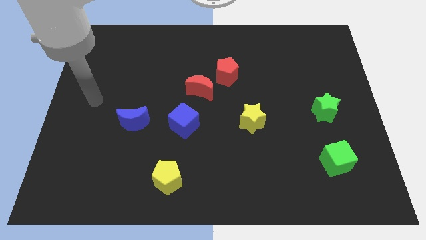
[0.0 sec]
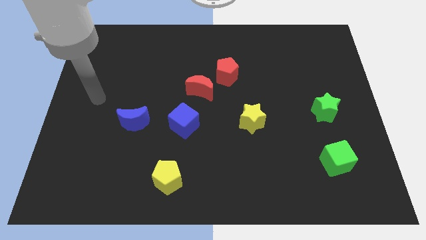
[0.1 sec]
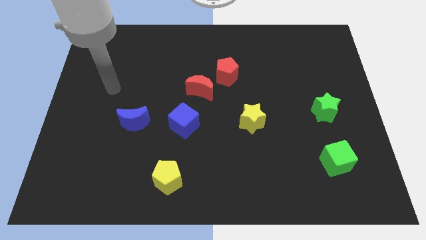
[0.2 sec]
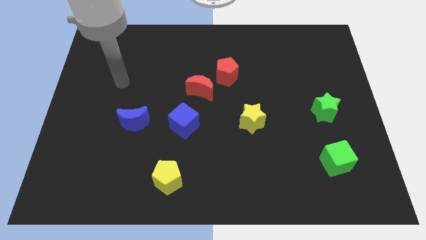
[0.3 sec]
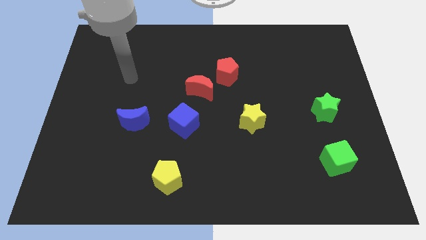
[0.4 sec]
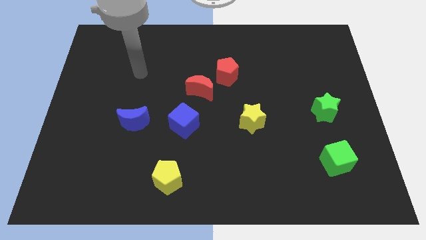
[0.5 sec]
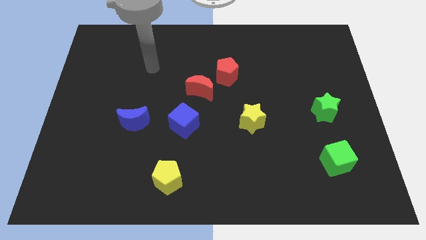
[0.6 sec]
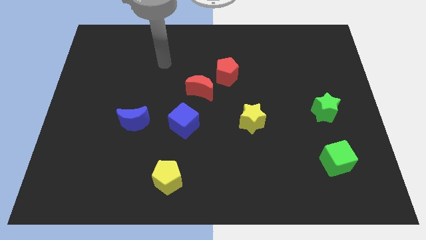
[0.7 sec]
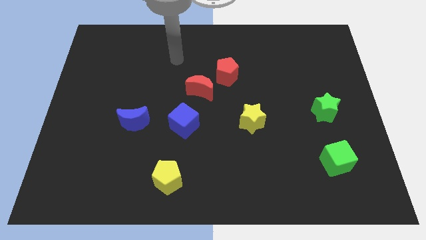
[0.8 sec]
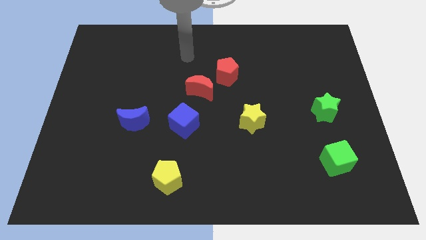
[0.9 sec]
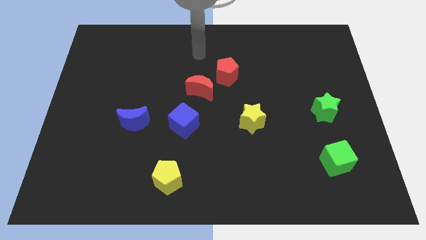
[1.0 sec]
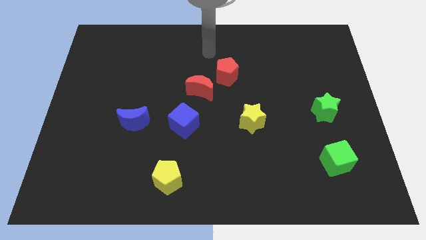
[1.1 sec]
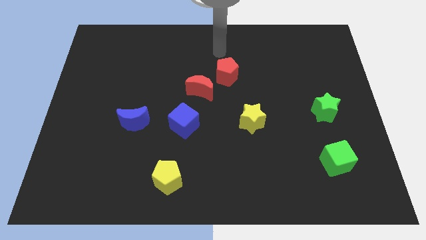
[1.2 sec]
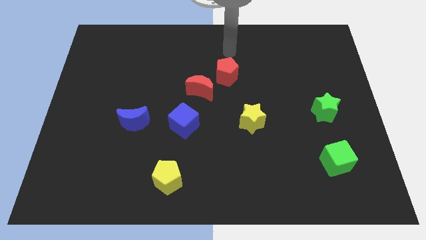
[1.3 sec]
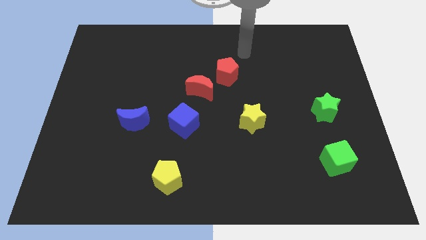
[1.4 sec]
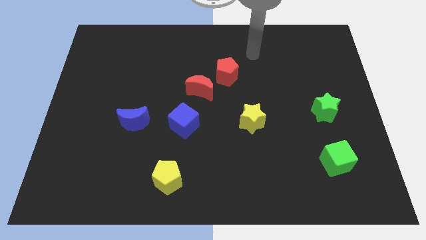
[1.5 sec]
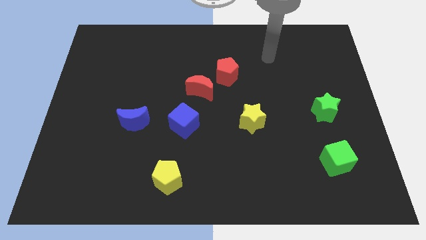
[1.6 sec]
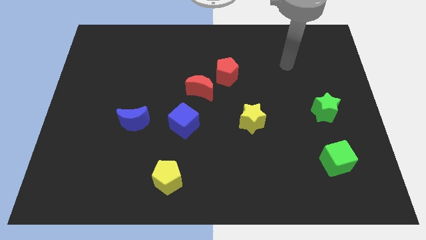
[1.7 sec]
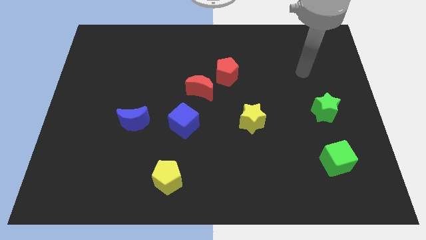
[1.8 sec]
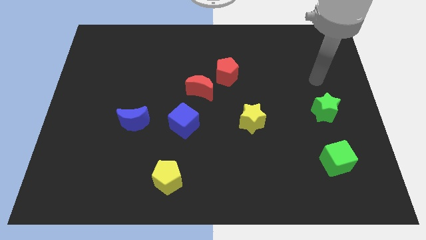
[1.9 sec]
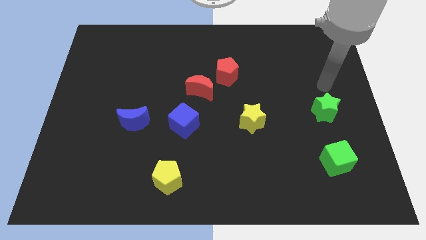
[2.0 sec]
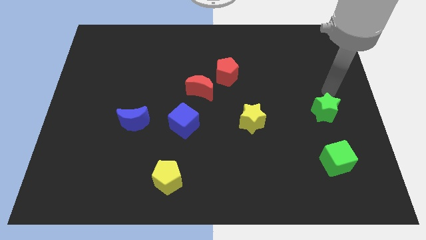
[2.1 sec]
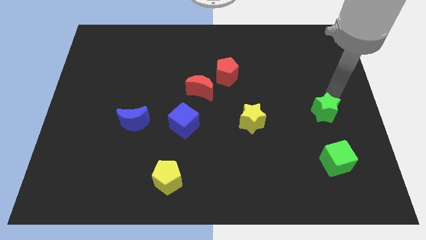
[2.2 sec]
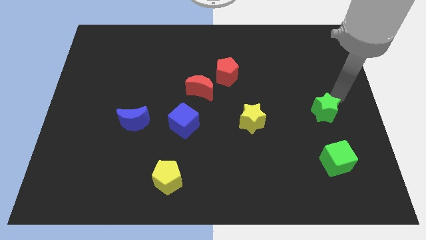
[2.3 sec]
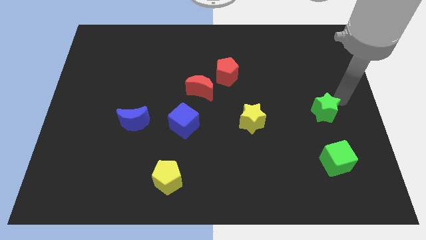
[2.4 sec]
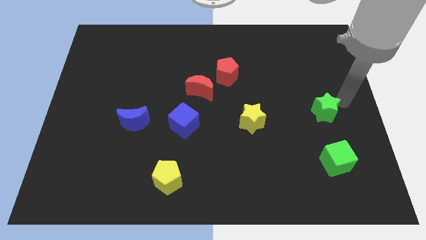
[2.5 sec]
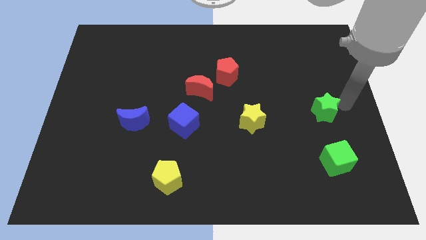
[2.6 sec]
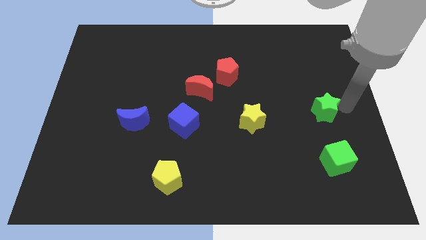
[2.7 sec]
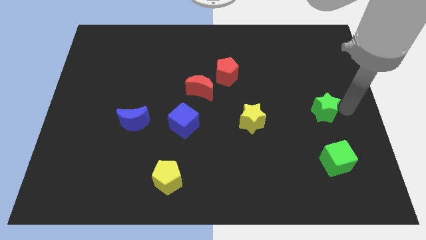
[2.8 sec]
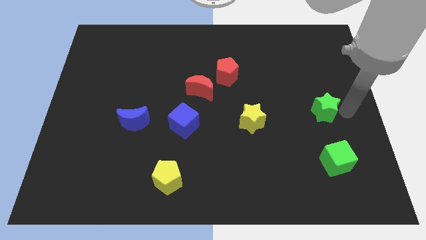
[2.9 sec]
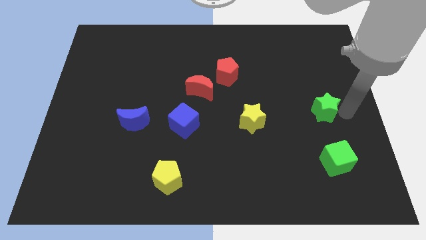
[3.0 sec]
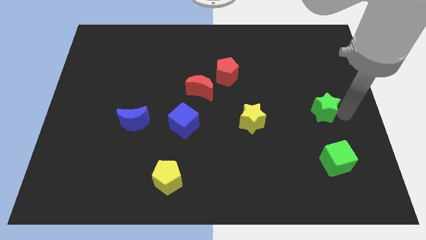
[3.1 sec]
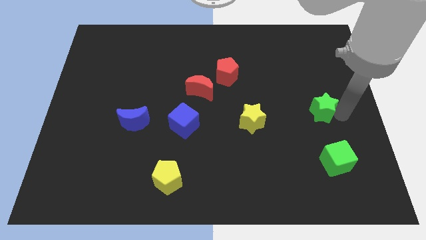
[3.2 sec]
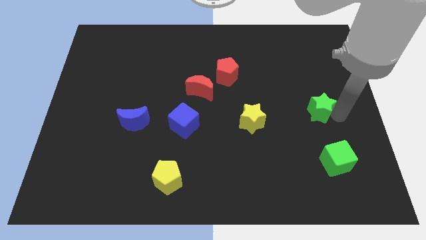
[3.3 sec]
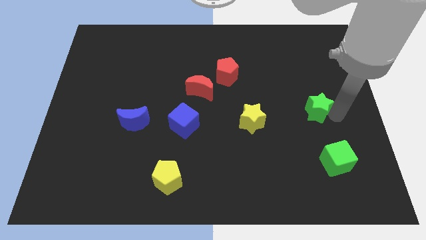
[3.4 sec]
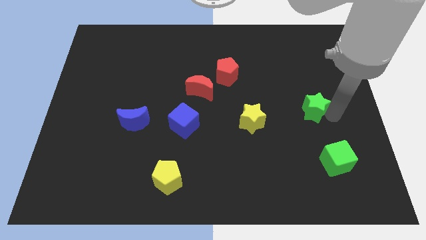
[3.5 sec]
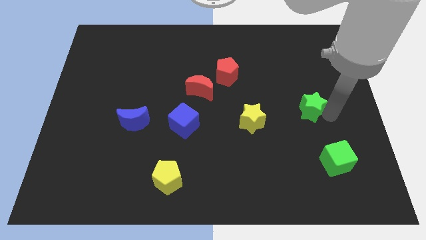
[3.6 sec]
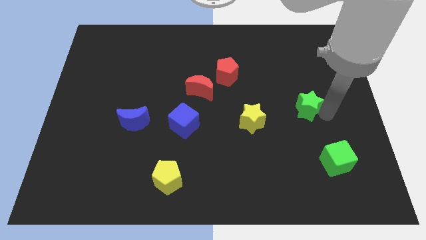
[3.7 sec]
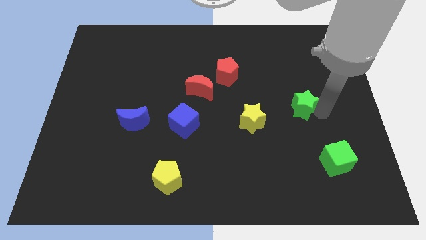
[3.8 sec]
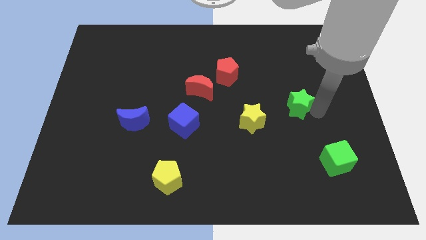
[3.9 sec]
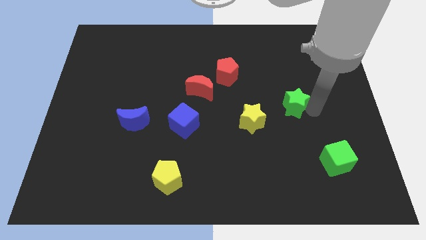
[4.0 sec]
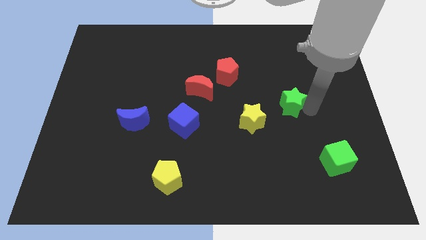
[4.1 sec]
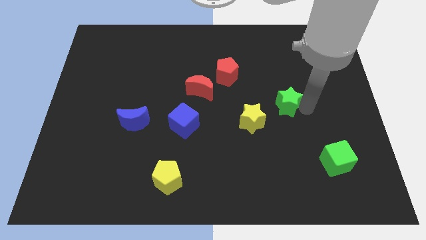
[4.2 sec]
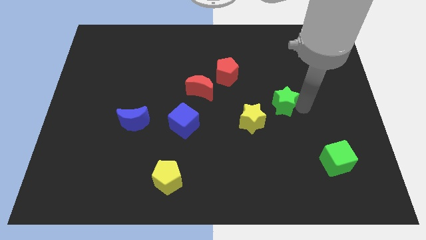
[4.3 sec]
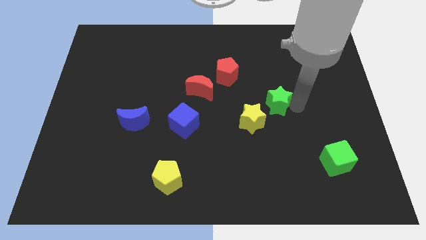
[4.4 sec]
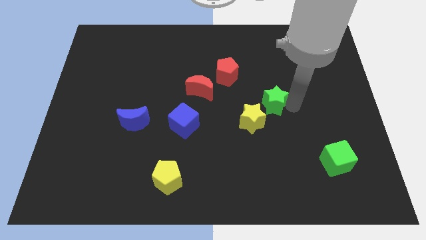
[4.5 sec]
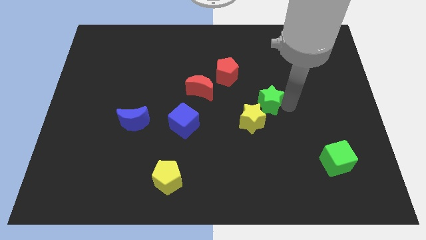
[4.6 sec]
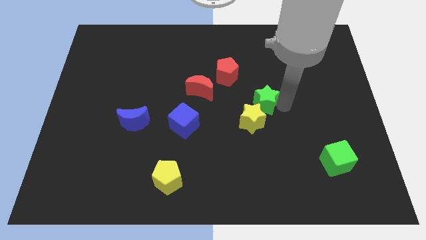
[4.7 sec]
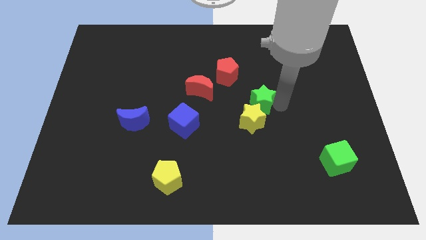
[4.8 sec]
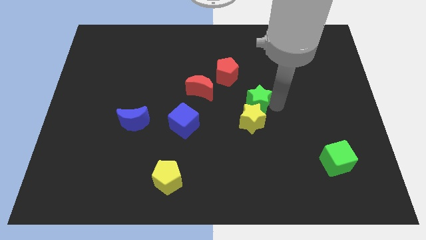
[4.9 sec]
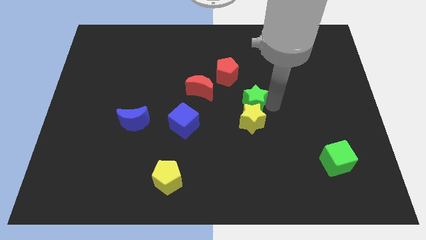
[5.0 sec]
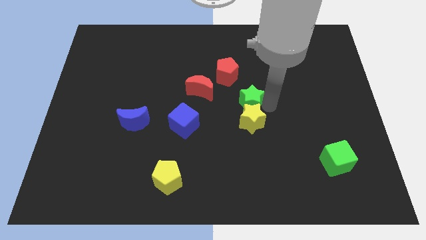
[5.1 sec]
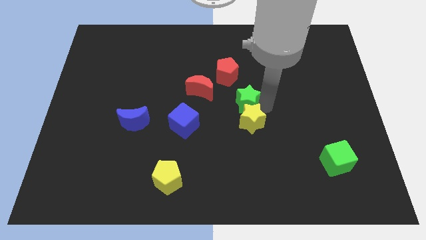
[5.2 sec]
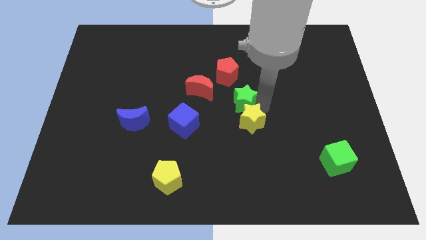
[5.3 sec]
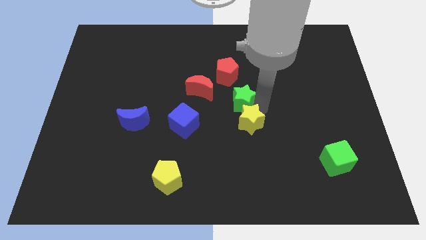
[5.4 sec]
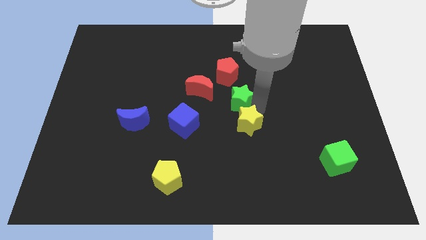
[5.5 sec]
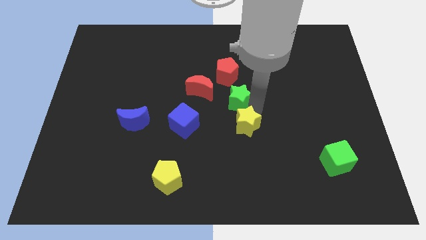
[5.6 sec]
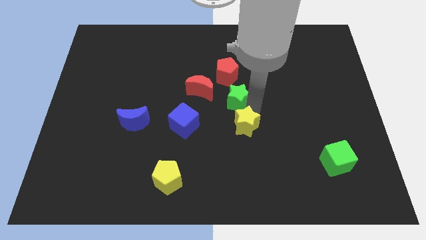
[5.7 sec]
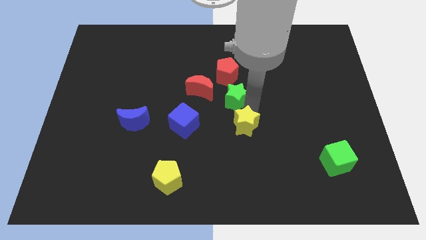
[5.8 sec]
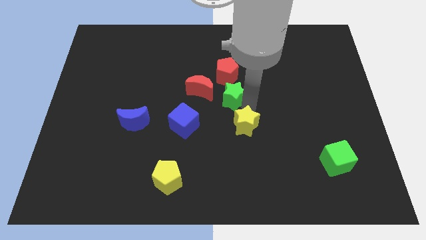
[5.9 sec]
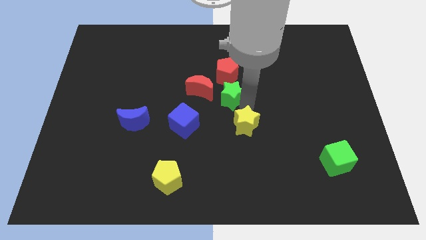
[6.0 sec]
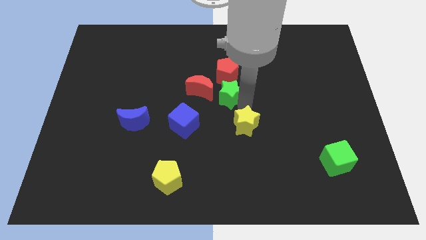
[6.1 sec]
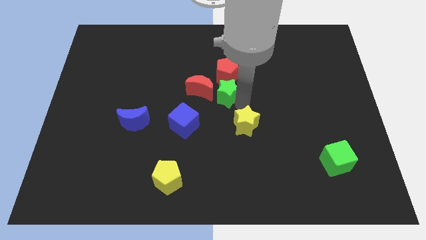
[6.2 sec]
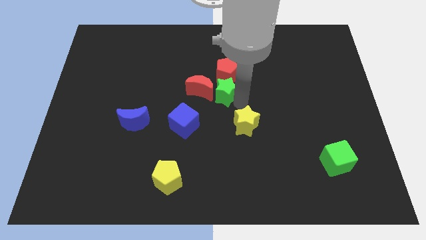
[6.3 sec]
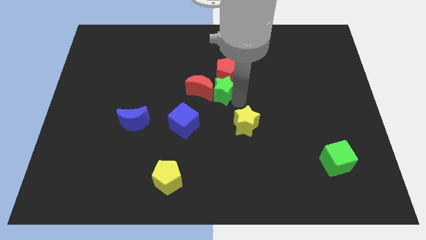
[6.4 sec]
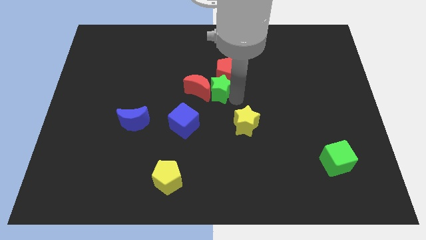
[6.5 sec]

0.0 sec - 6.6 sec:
push the green star close to the red moon

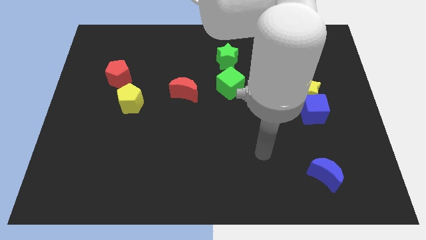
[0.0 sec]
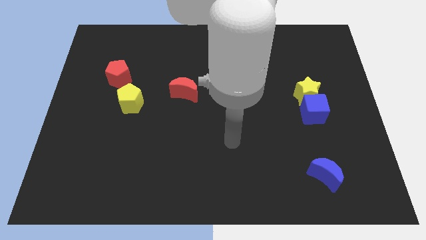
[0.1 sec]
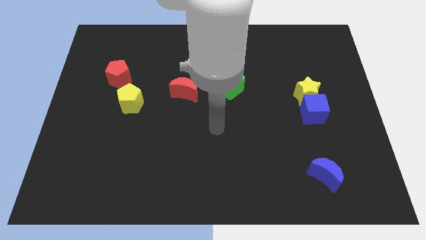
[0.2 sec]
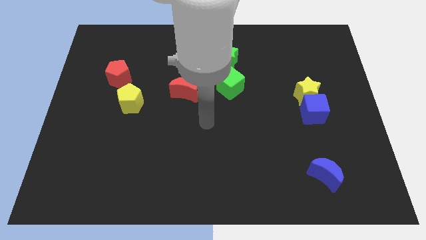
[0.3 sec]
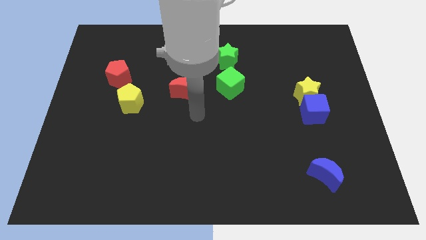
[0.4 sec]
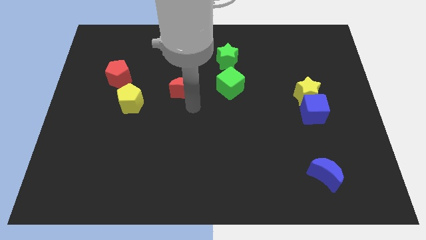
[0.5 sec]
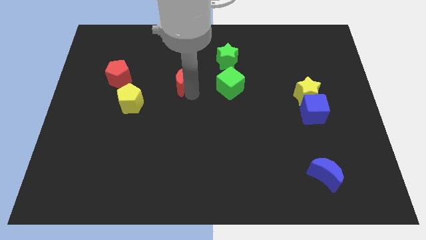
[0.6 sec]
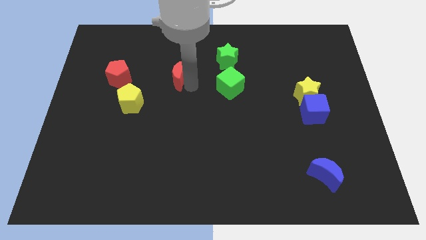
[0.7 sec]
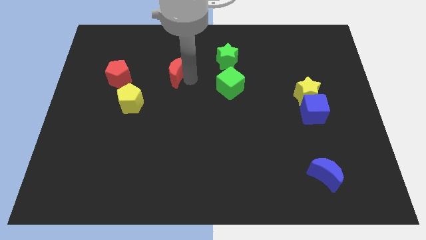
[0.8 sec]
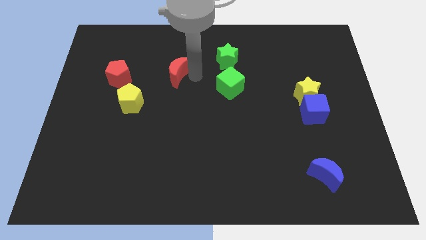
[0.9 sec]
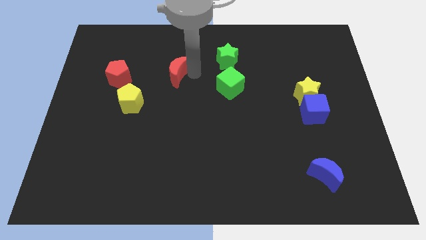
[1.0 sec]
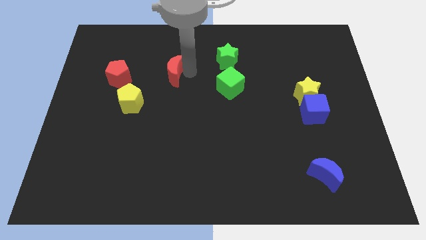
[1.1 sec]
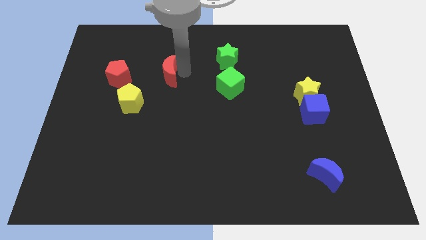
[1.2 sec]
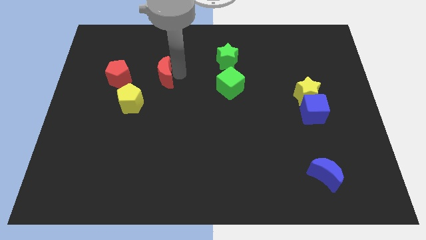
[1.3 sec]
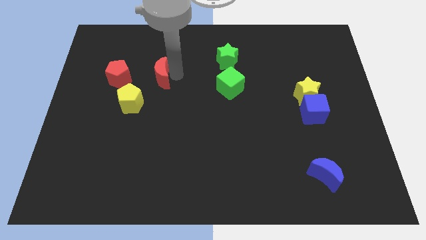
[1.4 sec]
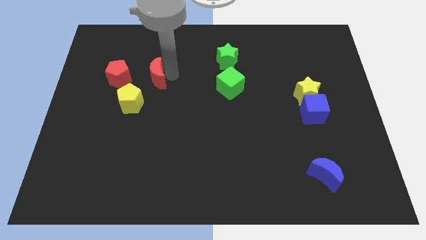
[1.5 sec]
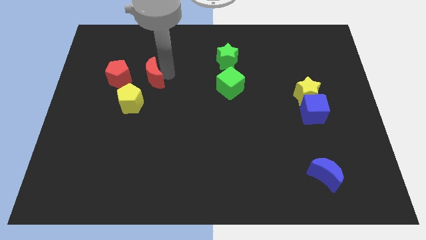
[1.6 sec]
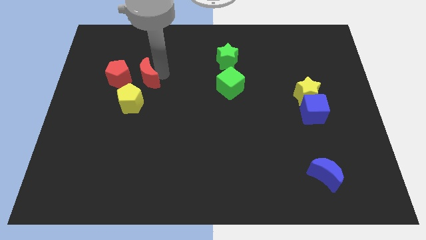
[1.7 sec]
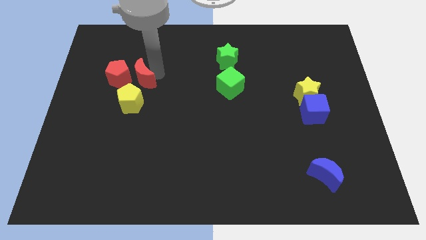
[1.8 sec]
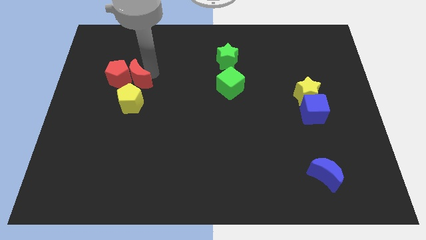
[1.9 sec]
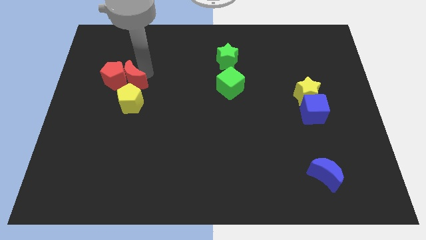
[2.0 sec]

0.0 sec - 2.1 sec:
slide the red moon towards the red pentagon
